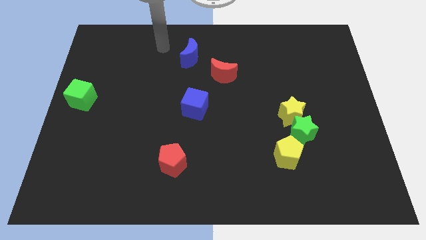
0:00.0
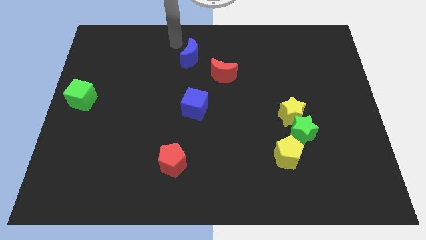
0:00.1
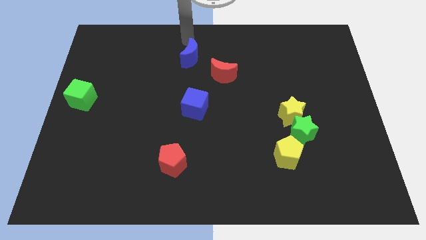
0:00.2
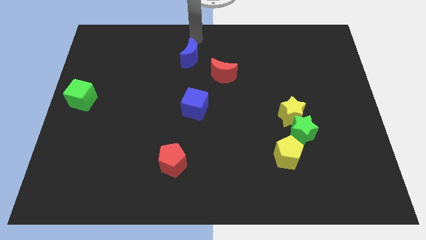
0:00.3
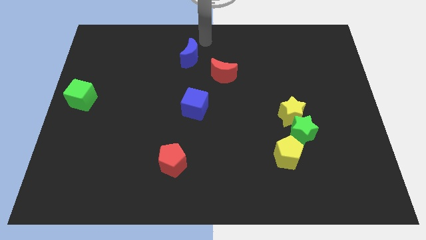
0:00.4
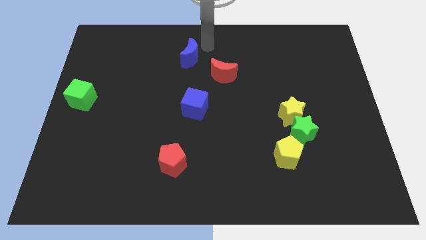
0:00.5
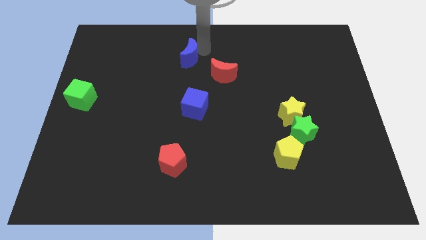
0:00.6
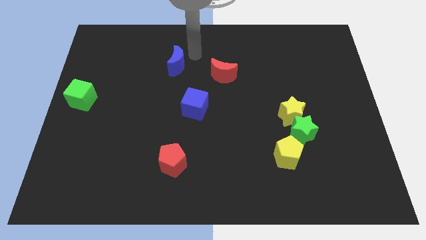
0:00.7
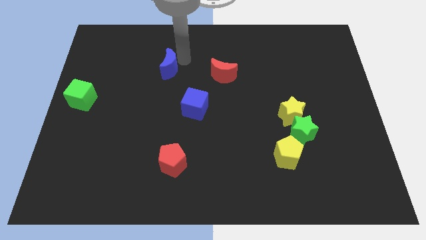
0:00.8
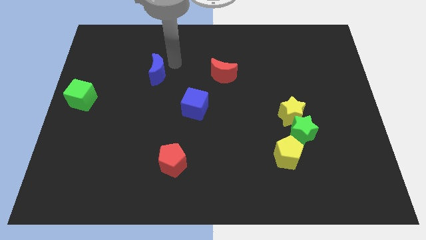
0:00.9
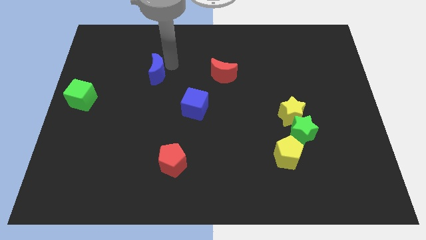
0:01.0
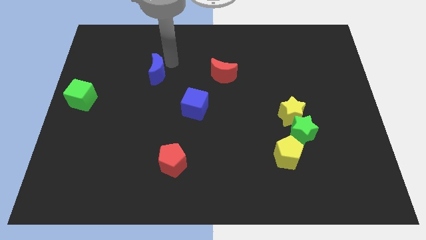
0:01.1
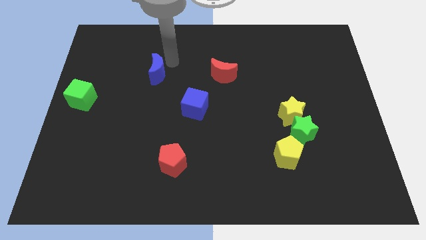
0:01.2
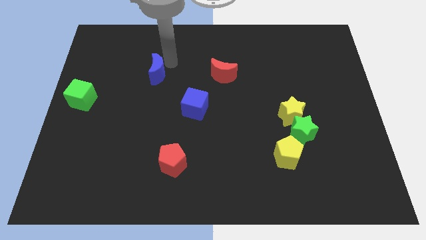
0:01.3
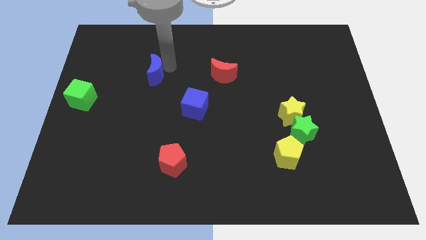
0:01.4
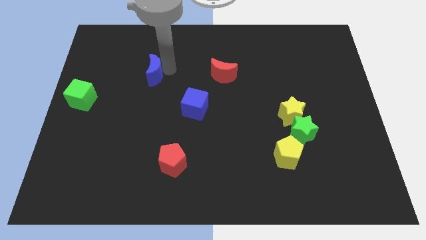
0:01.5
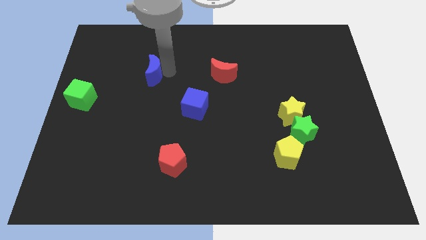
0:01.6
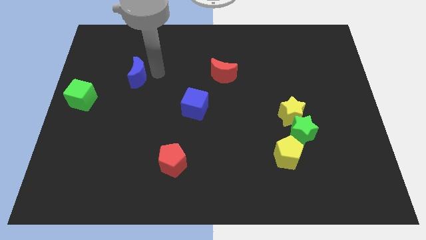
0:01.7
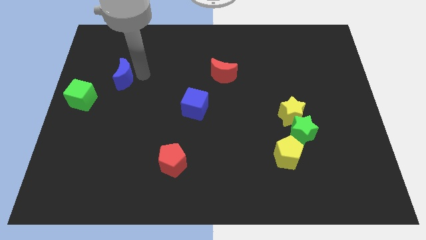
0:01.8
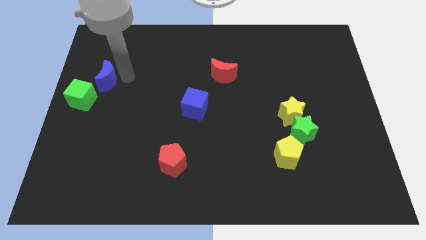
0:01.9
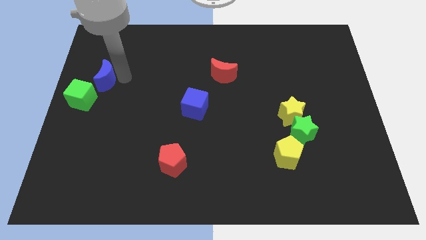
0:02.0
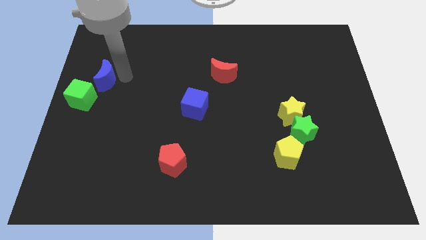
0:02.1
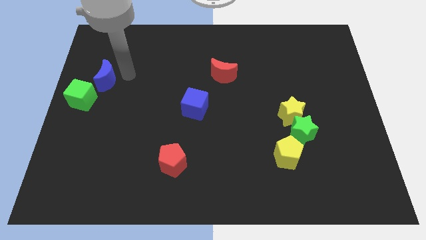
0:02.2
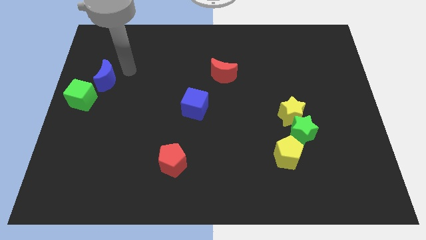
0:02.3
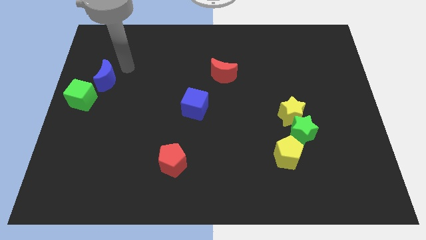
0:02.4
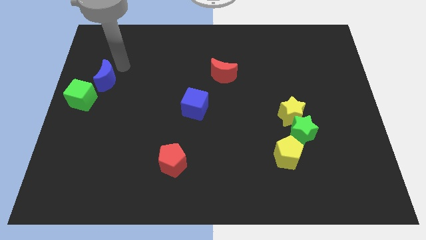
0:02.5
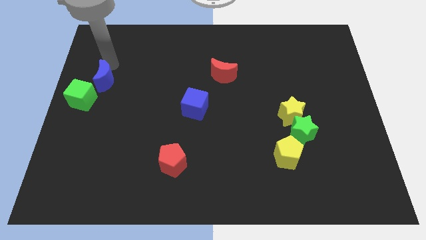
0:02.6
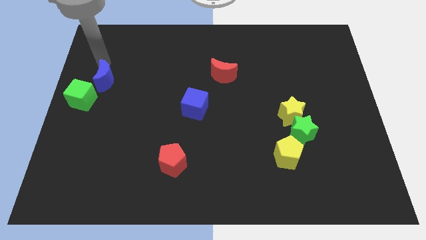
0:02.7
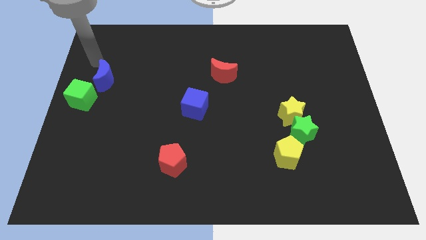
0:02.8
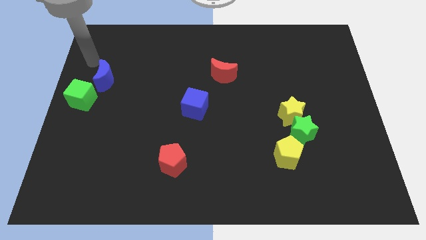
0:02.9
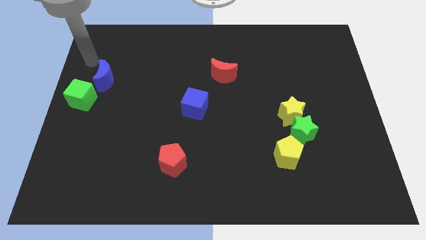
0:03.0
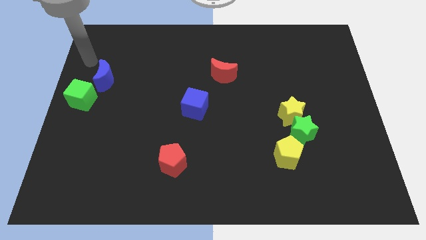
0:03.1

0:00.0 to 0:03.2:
push blue moon to the top of green cube

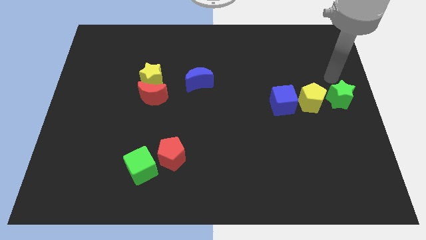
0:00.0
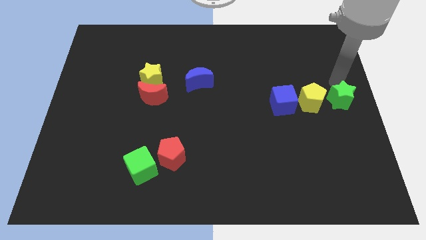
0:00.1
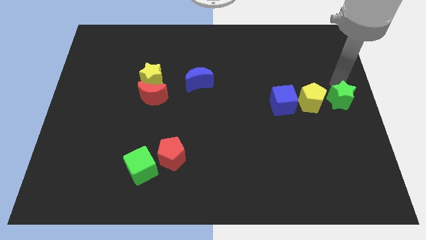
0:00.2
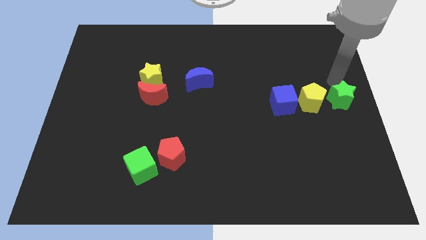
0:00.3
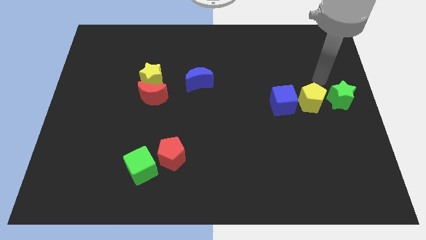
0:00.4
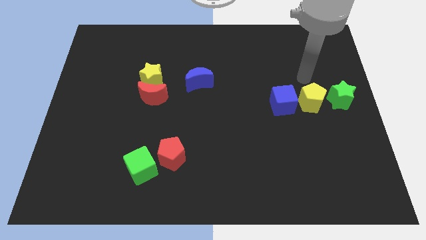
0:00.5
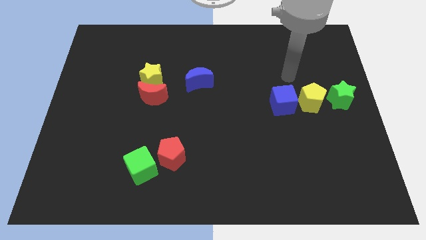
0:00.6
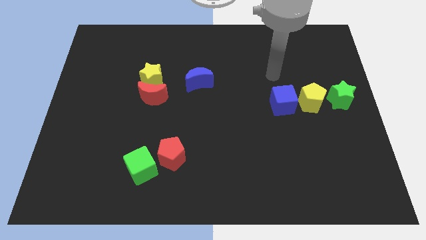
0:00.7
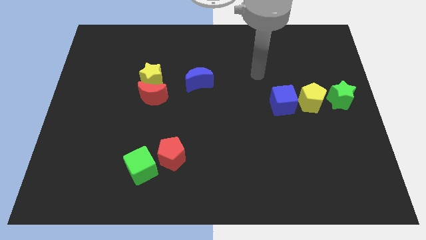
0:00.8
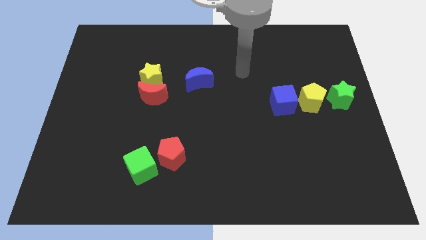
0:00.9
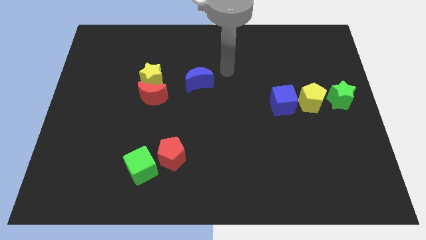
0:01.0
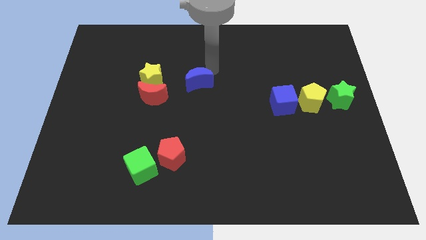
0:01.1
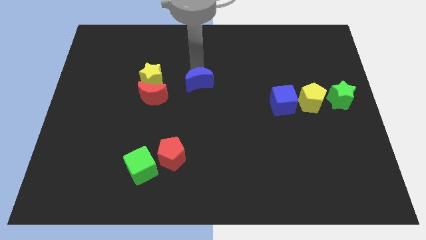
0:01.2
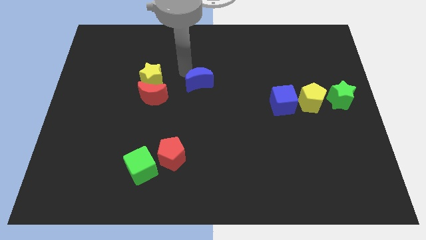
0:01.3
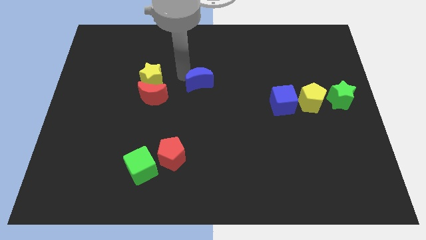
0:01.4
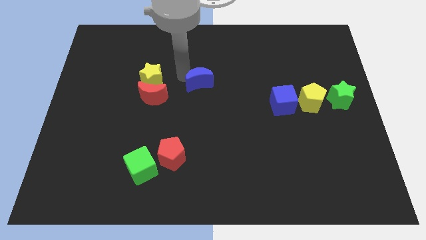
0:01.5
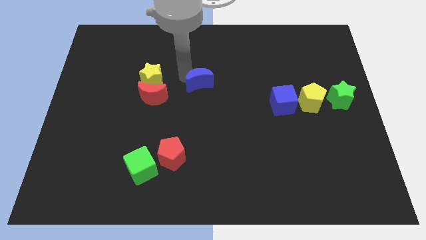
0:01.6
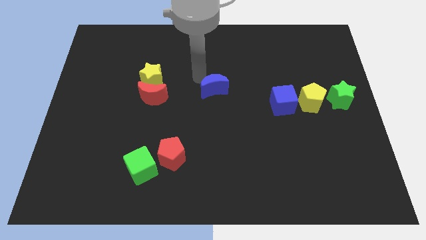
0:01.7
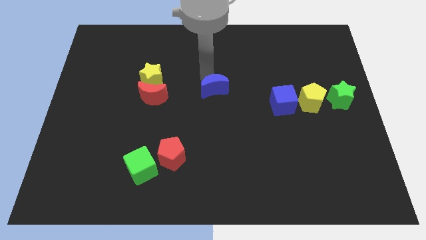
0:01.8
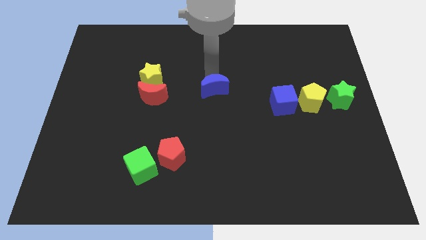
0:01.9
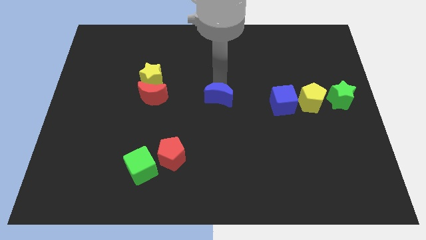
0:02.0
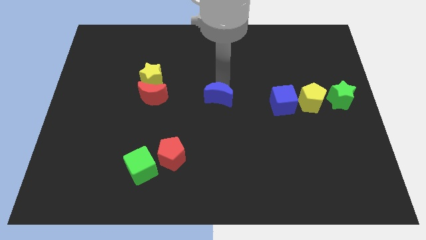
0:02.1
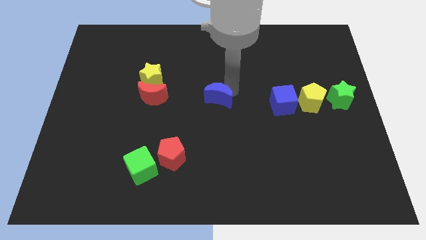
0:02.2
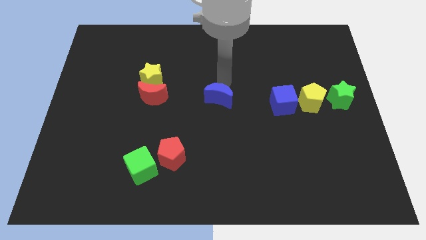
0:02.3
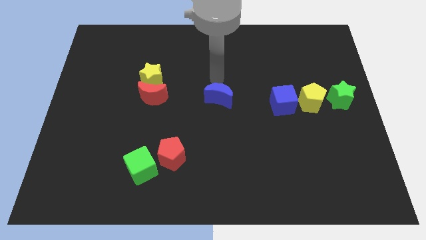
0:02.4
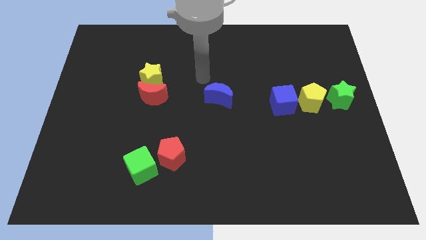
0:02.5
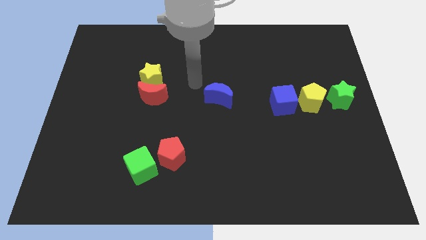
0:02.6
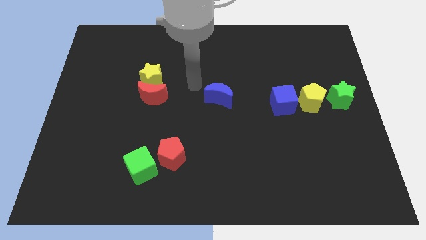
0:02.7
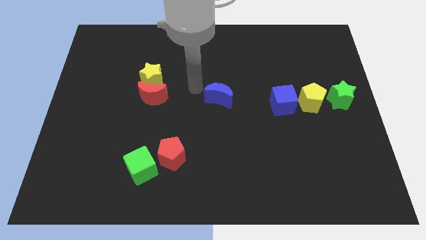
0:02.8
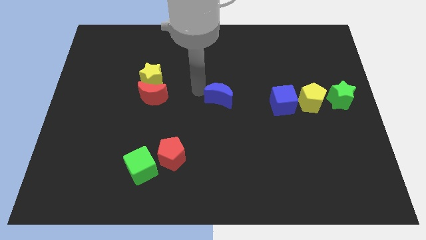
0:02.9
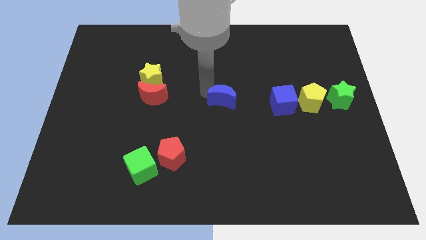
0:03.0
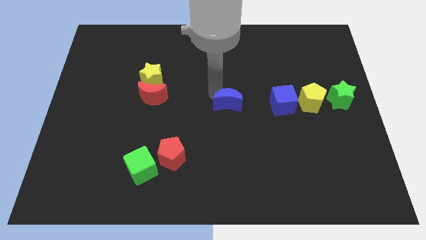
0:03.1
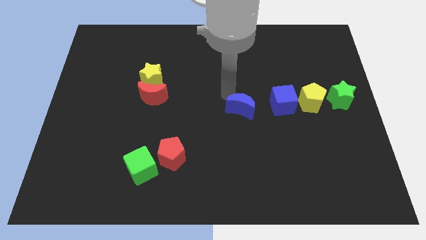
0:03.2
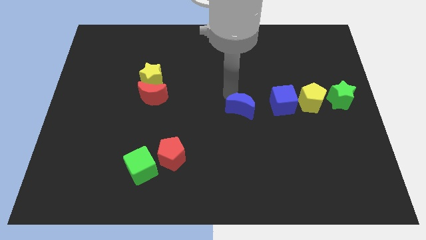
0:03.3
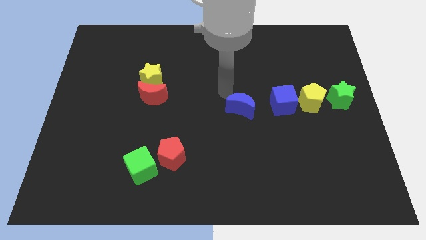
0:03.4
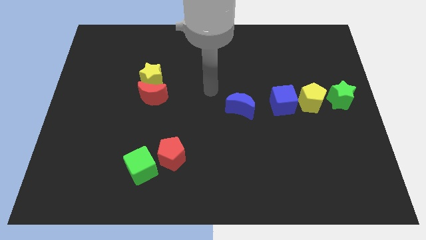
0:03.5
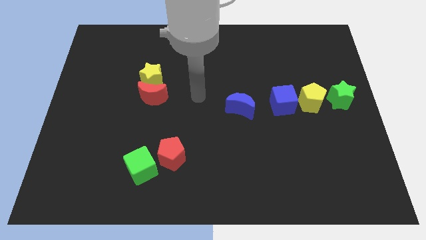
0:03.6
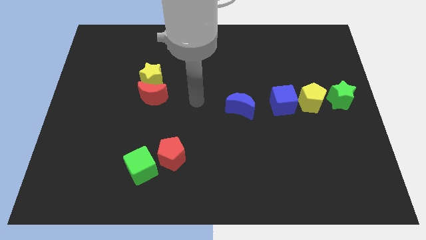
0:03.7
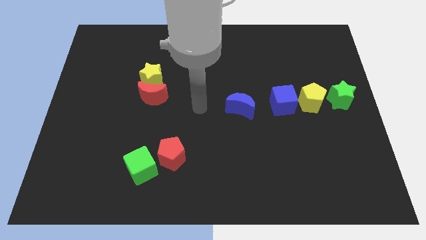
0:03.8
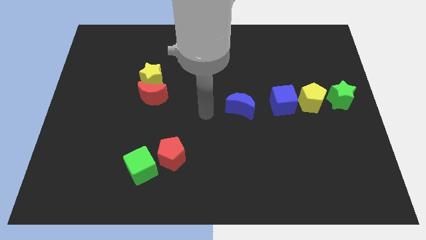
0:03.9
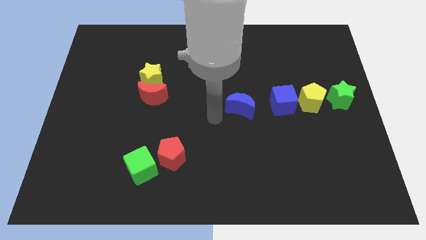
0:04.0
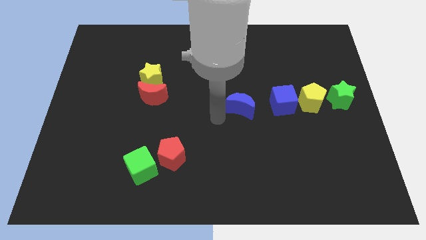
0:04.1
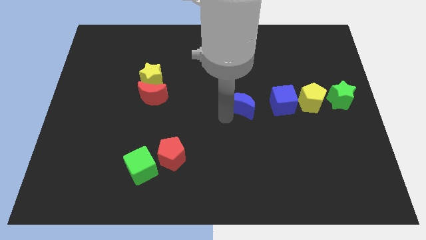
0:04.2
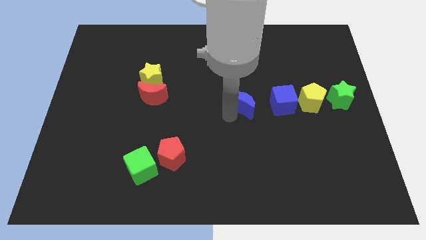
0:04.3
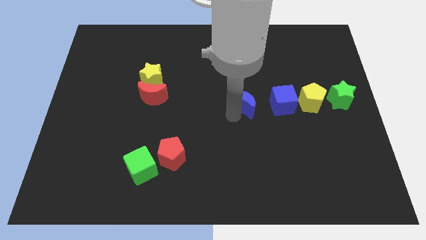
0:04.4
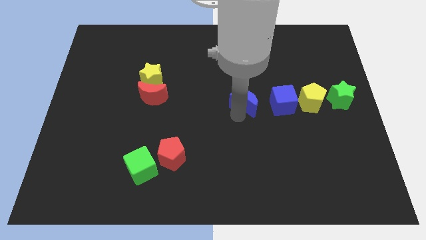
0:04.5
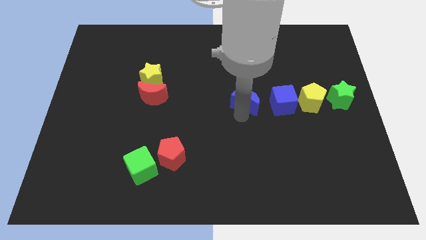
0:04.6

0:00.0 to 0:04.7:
place the blue moon left to the blue cube

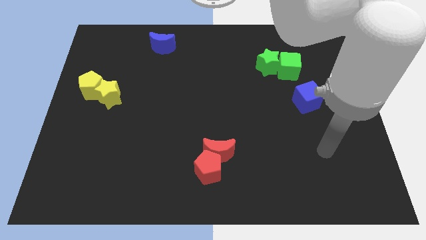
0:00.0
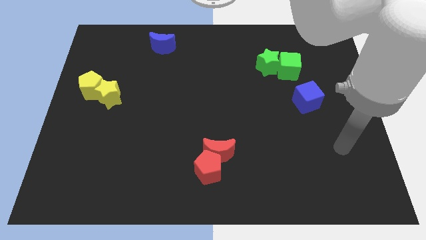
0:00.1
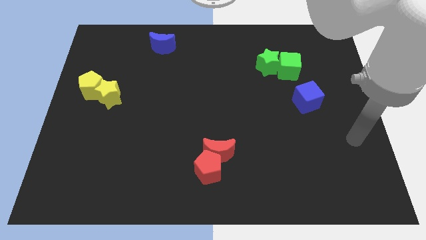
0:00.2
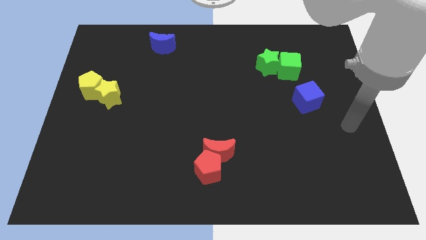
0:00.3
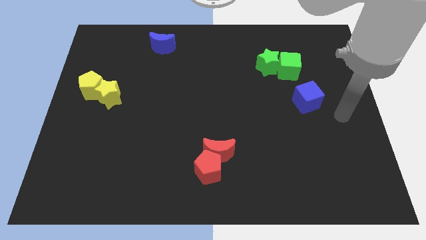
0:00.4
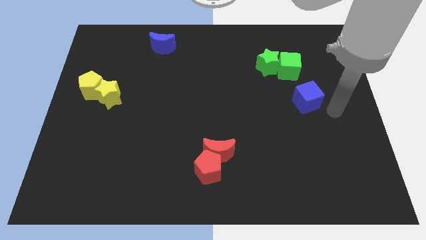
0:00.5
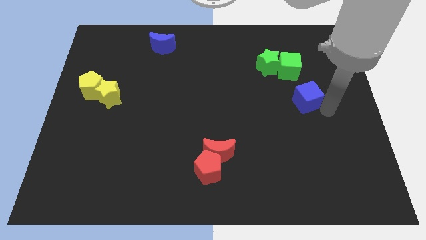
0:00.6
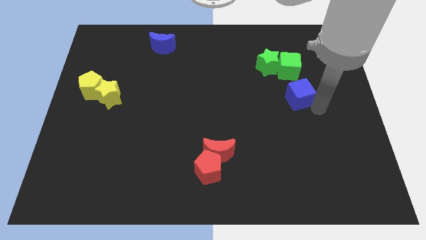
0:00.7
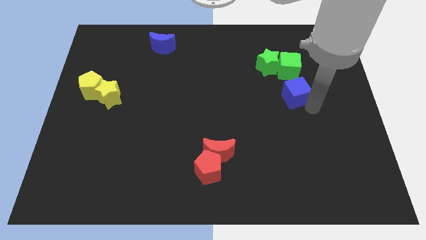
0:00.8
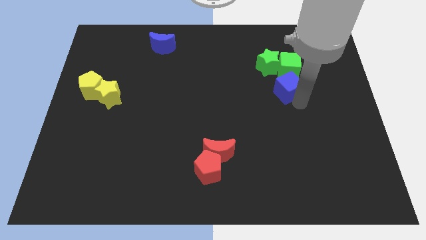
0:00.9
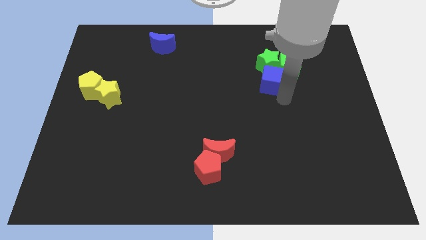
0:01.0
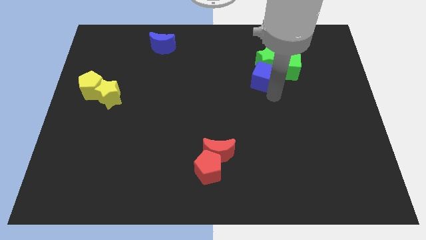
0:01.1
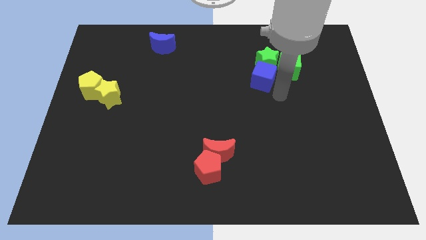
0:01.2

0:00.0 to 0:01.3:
move the blue cube into the bottom side of the green star
